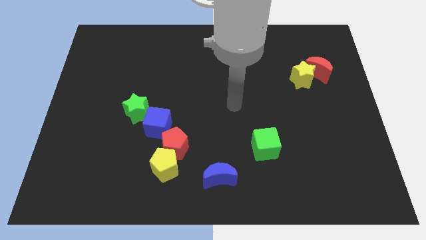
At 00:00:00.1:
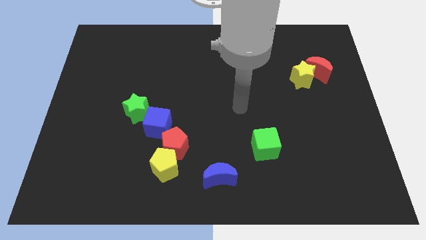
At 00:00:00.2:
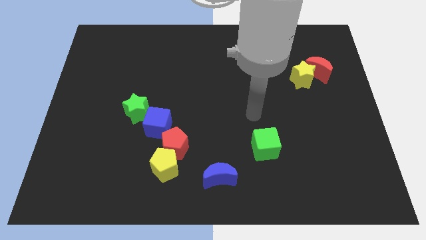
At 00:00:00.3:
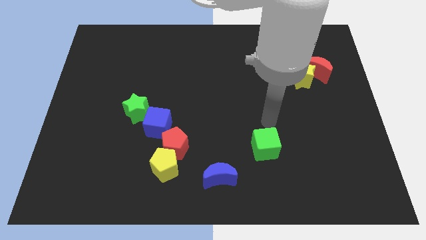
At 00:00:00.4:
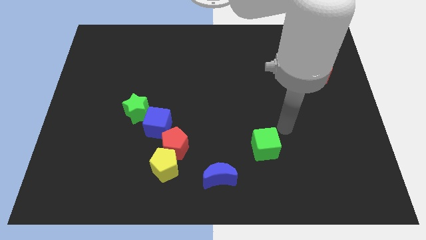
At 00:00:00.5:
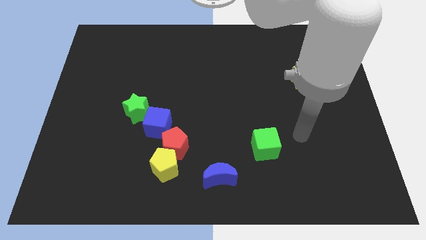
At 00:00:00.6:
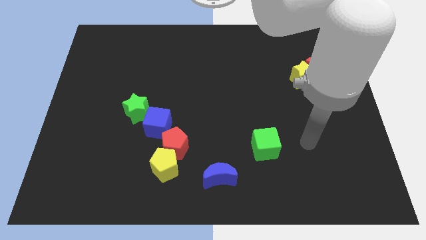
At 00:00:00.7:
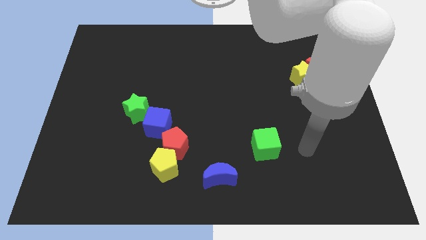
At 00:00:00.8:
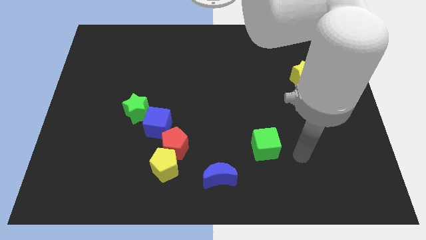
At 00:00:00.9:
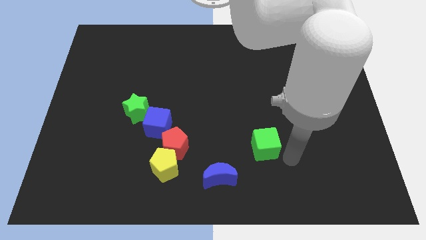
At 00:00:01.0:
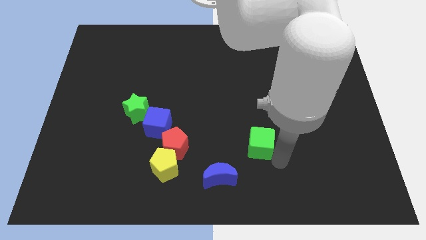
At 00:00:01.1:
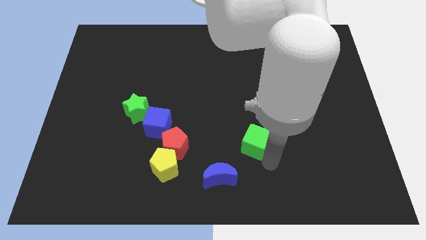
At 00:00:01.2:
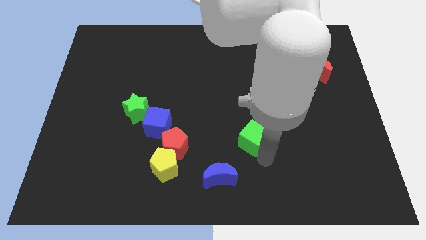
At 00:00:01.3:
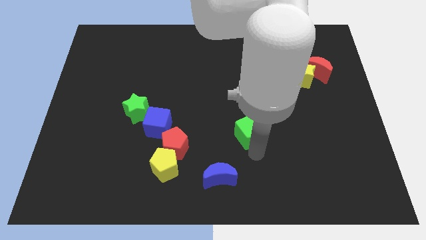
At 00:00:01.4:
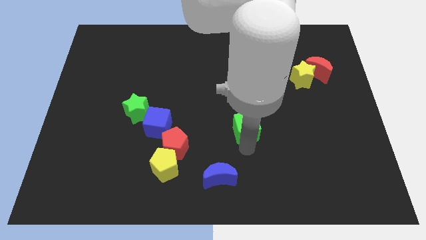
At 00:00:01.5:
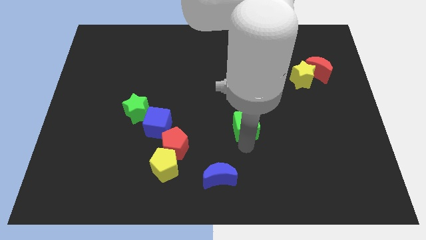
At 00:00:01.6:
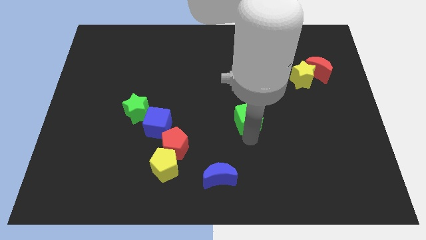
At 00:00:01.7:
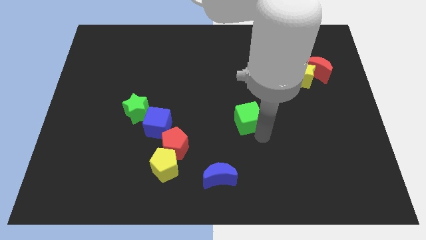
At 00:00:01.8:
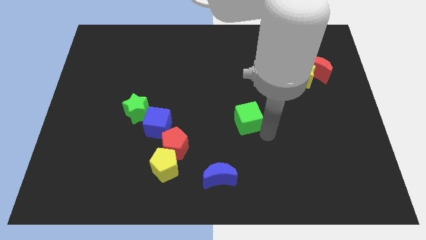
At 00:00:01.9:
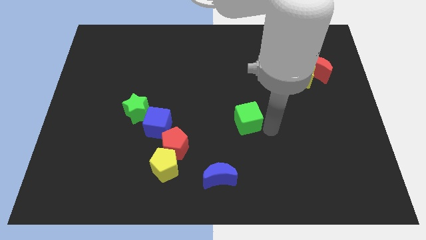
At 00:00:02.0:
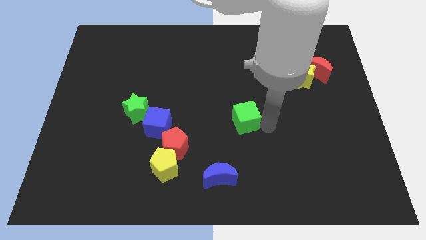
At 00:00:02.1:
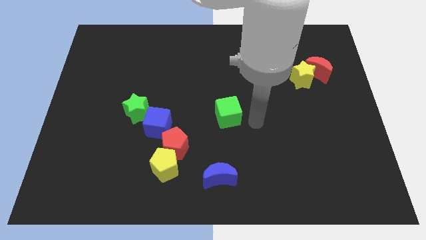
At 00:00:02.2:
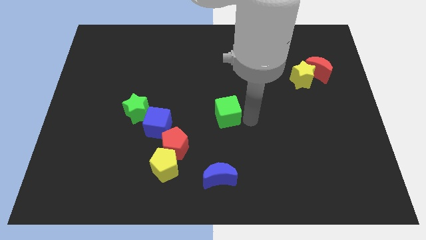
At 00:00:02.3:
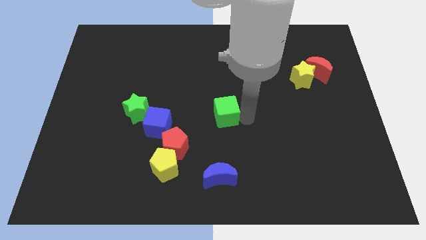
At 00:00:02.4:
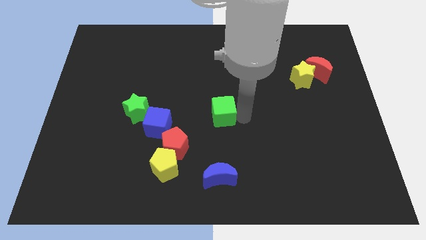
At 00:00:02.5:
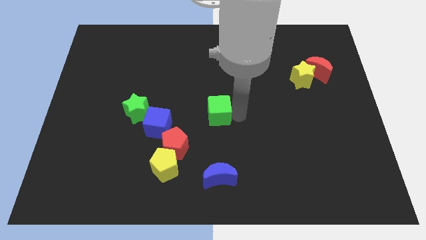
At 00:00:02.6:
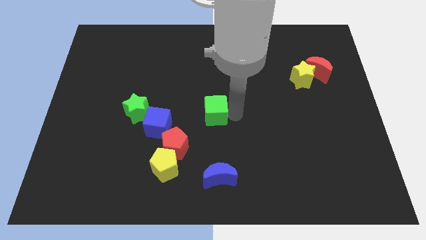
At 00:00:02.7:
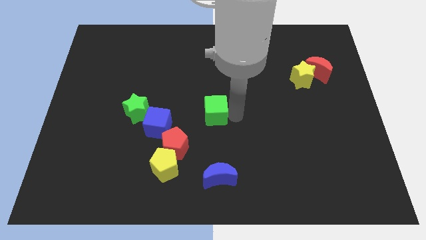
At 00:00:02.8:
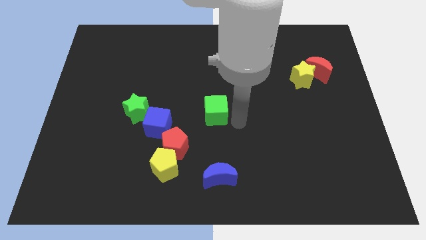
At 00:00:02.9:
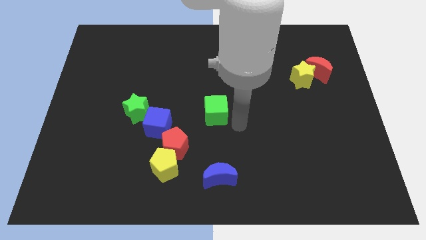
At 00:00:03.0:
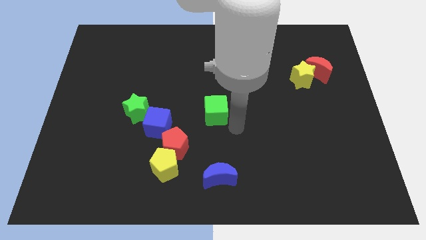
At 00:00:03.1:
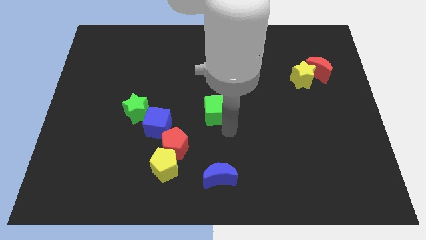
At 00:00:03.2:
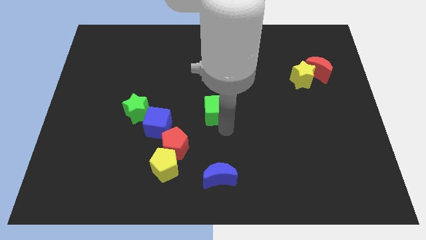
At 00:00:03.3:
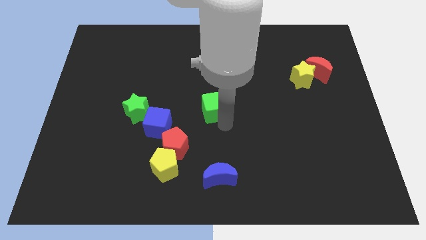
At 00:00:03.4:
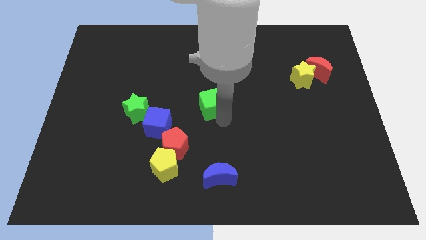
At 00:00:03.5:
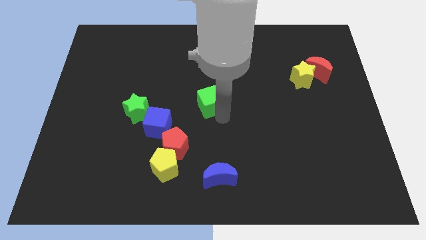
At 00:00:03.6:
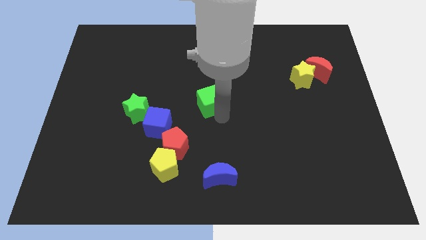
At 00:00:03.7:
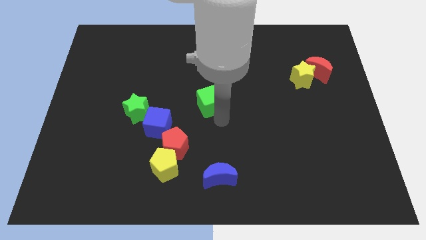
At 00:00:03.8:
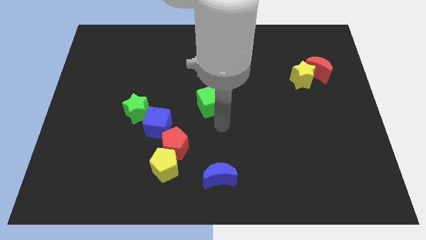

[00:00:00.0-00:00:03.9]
move the green cube to the center

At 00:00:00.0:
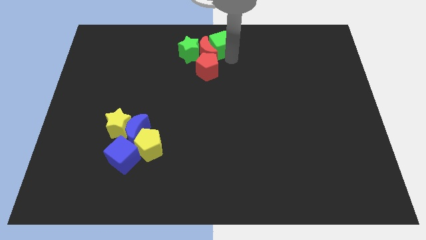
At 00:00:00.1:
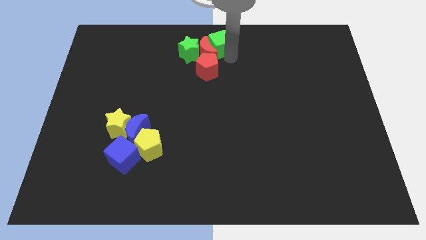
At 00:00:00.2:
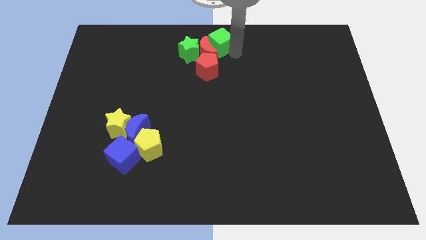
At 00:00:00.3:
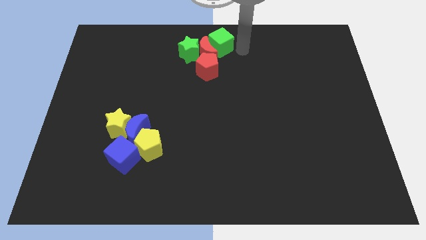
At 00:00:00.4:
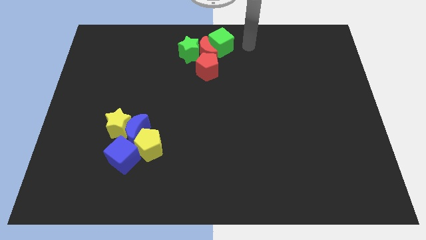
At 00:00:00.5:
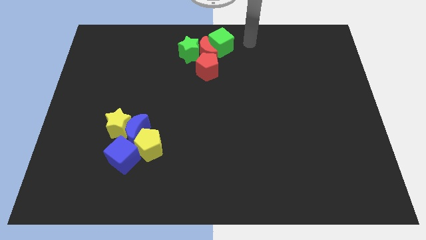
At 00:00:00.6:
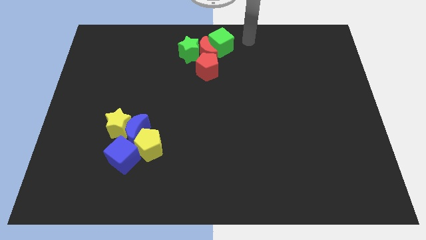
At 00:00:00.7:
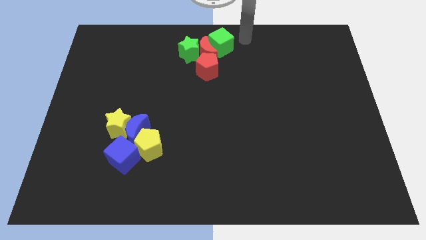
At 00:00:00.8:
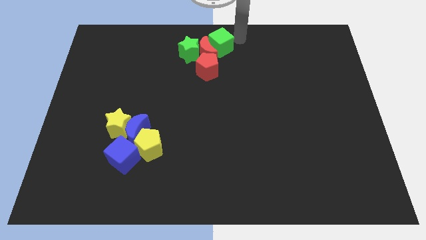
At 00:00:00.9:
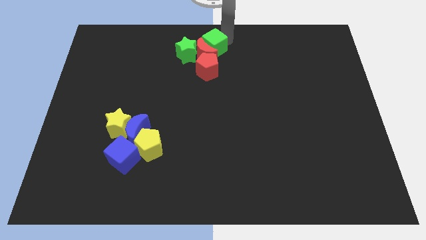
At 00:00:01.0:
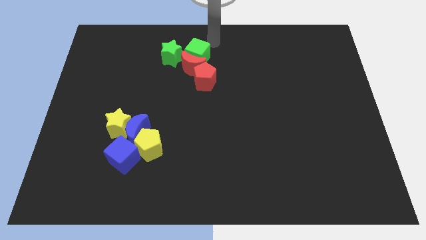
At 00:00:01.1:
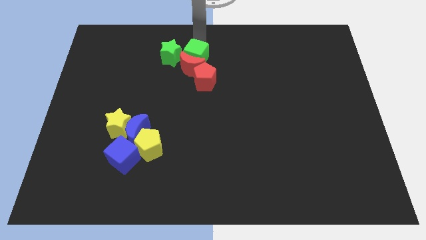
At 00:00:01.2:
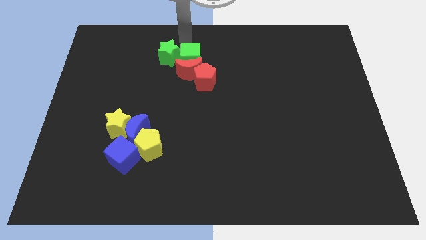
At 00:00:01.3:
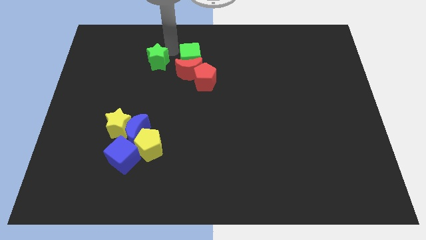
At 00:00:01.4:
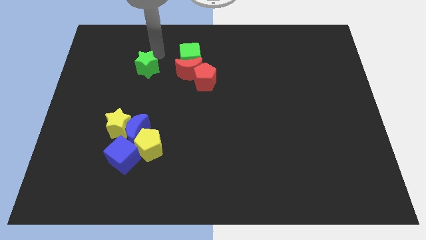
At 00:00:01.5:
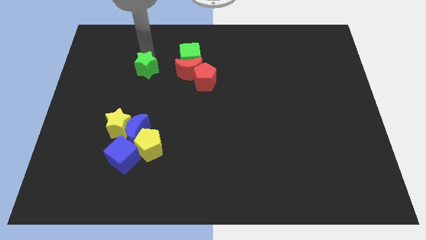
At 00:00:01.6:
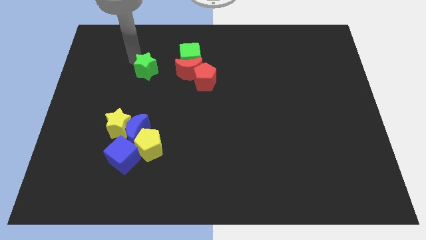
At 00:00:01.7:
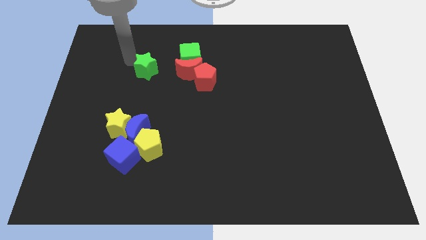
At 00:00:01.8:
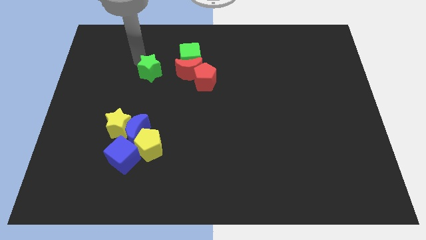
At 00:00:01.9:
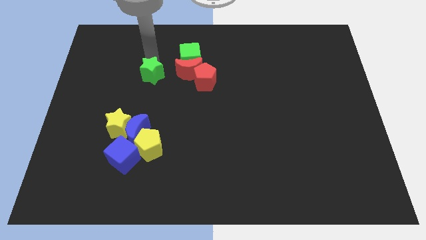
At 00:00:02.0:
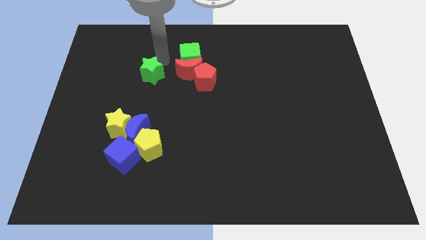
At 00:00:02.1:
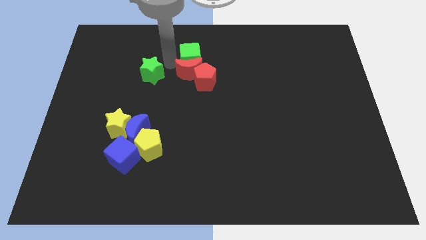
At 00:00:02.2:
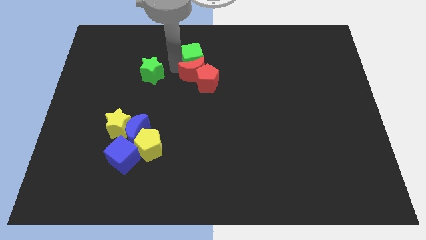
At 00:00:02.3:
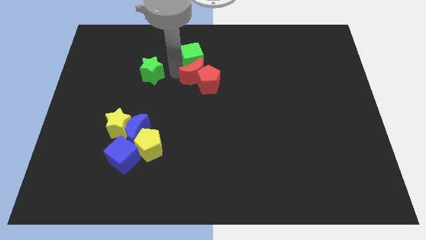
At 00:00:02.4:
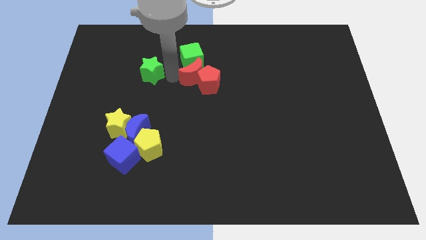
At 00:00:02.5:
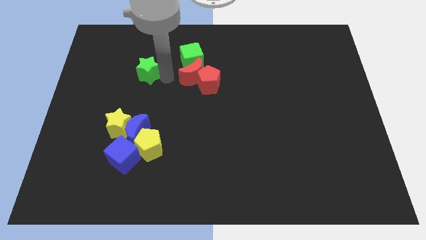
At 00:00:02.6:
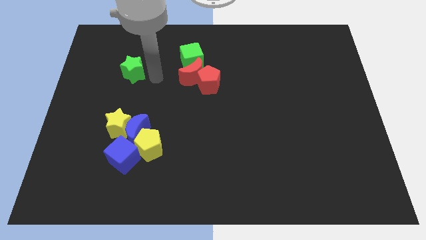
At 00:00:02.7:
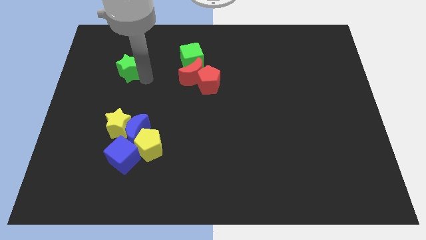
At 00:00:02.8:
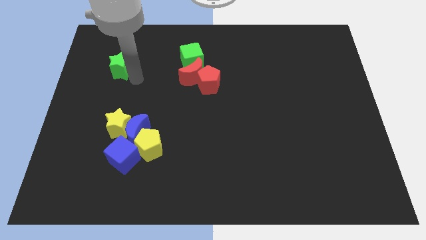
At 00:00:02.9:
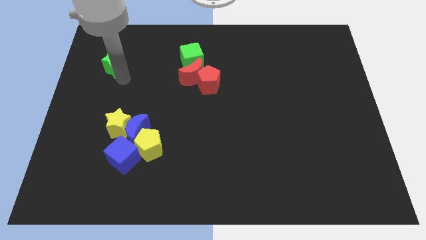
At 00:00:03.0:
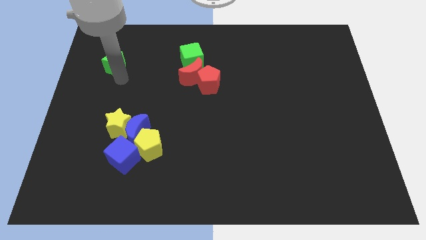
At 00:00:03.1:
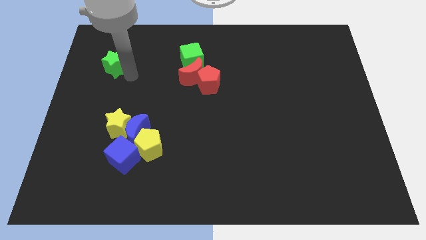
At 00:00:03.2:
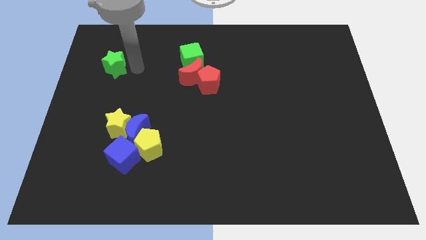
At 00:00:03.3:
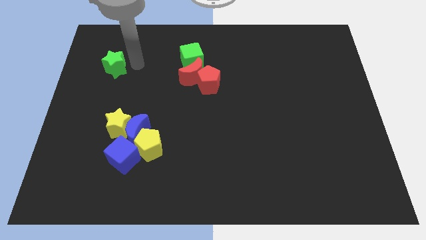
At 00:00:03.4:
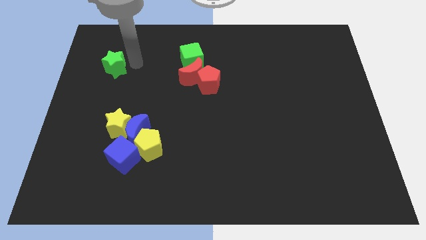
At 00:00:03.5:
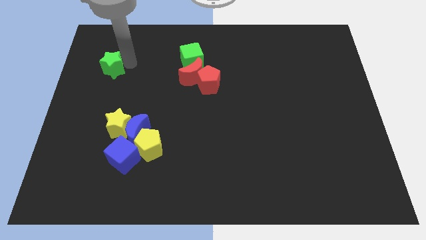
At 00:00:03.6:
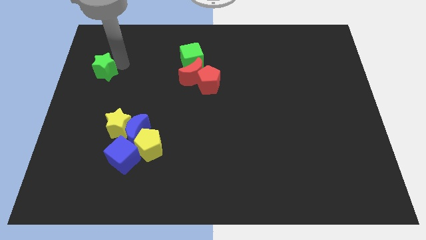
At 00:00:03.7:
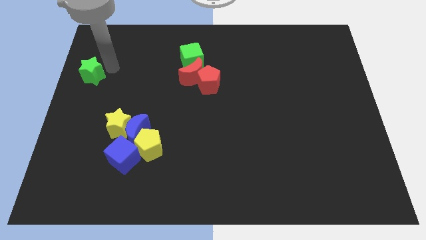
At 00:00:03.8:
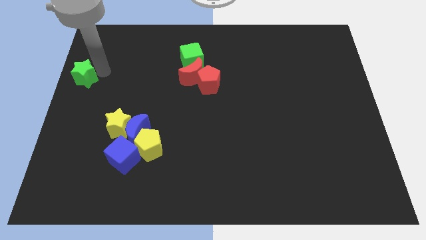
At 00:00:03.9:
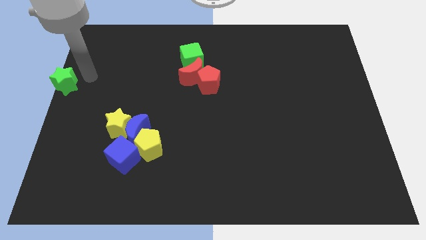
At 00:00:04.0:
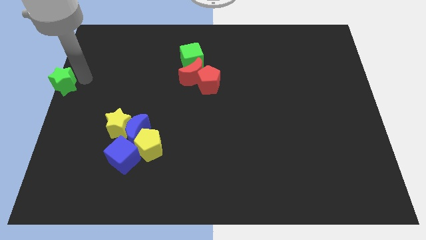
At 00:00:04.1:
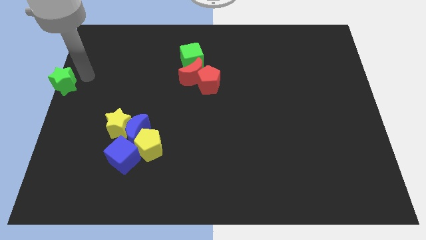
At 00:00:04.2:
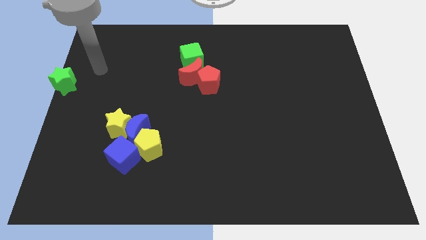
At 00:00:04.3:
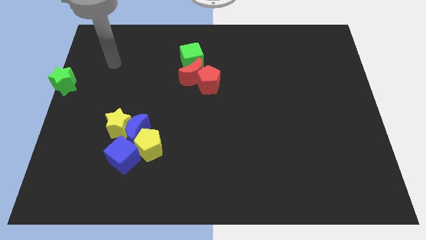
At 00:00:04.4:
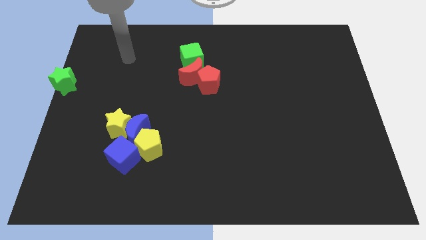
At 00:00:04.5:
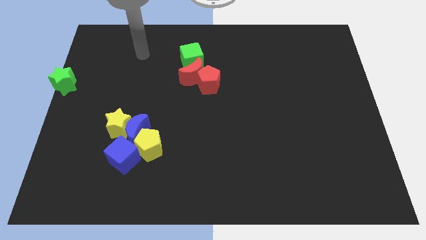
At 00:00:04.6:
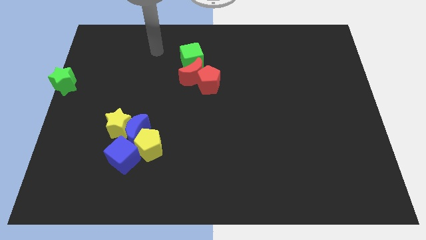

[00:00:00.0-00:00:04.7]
separate the green star and red moon

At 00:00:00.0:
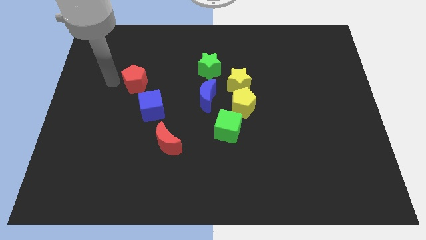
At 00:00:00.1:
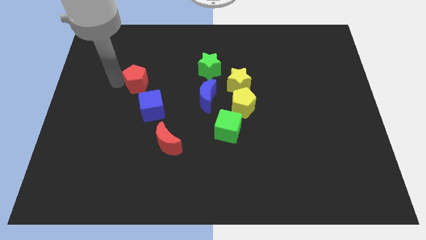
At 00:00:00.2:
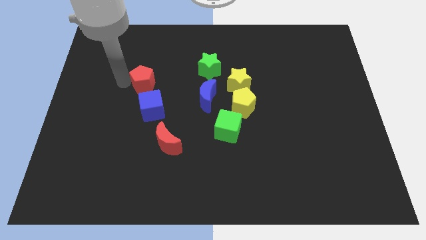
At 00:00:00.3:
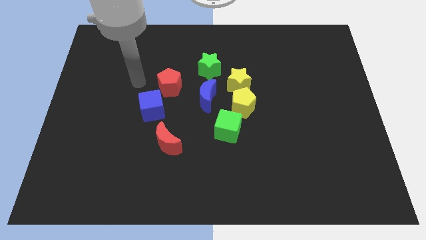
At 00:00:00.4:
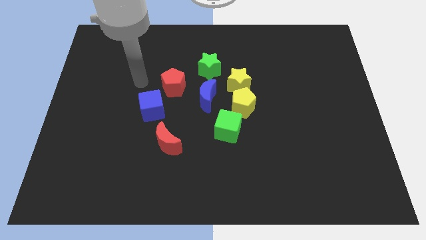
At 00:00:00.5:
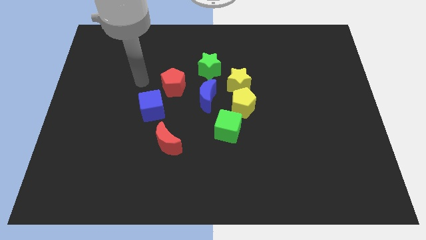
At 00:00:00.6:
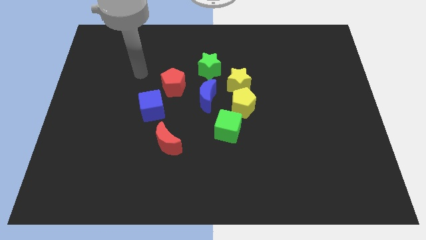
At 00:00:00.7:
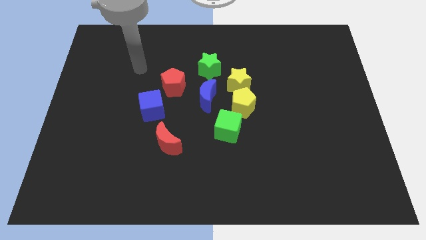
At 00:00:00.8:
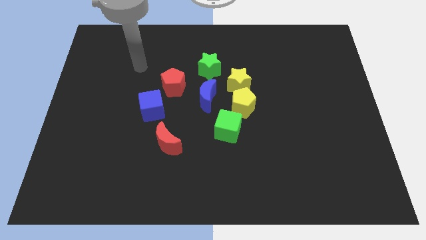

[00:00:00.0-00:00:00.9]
push the red pentagon to the top right to the blue cube
